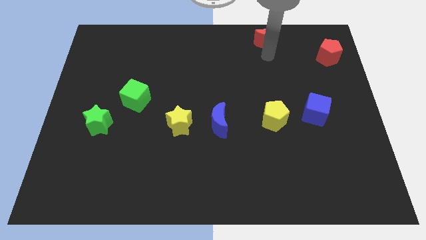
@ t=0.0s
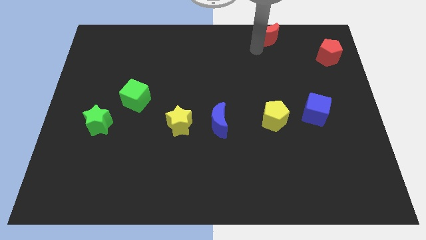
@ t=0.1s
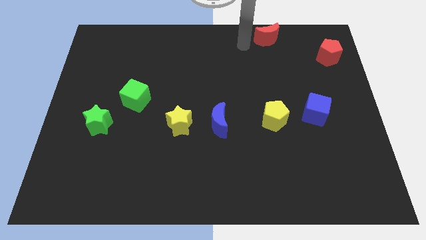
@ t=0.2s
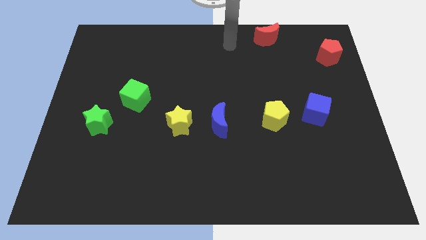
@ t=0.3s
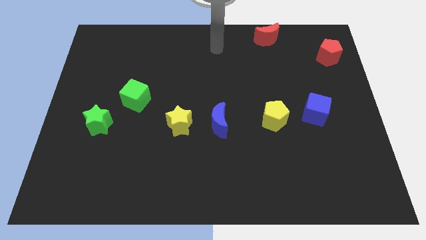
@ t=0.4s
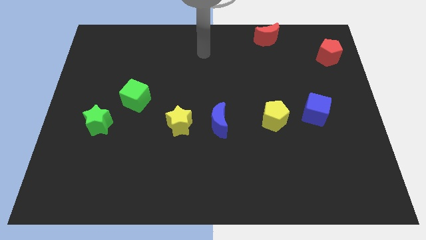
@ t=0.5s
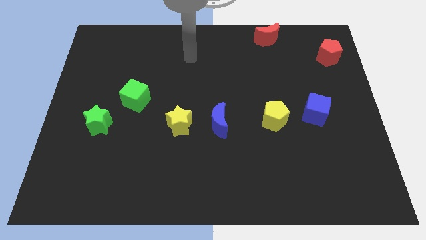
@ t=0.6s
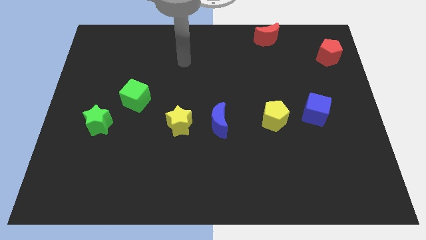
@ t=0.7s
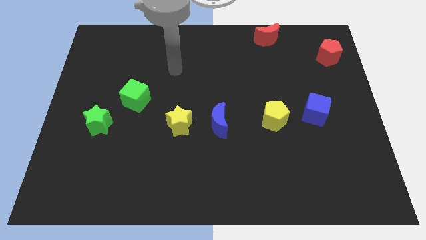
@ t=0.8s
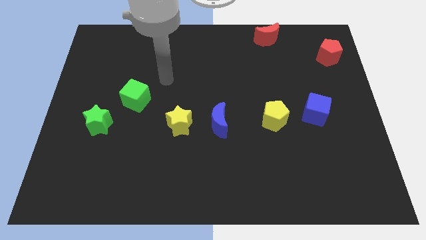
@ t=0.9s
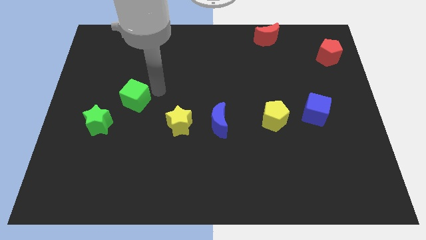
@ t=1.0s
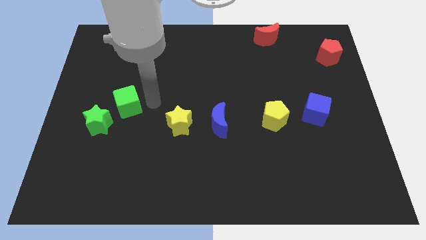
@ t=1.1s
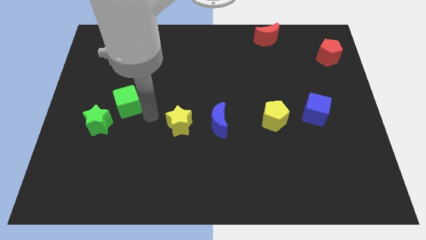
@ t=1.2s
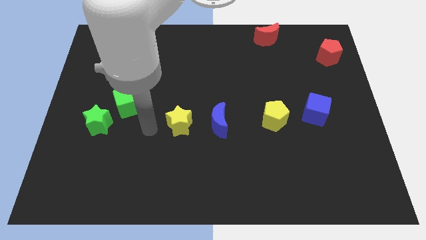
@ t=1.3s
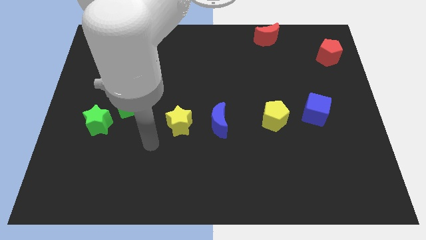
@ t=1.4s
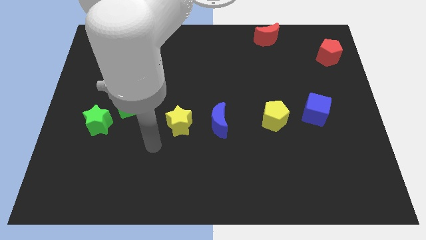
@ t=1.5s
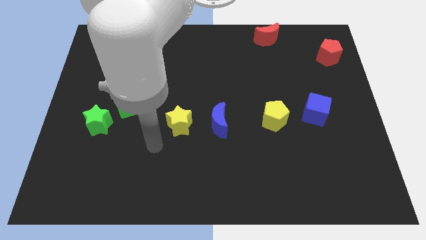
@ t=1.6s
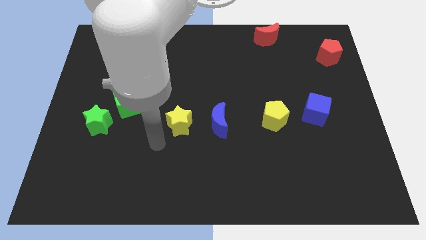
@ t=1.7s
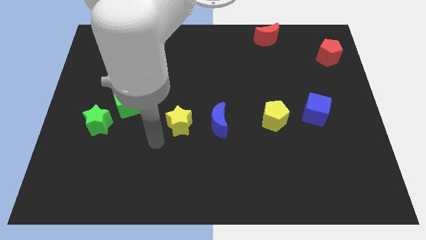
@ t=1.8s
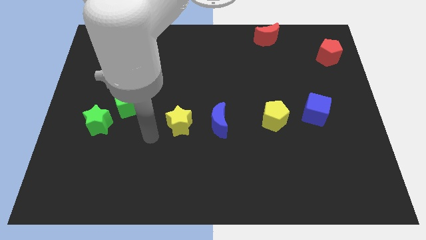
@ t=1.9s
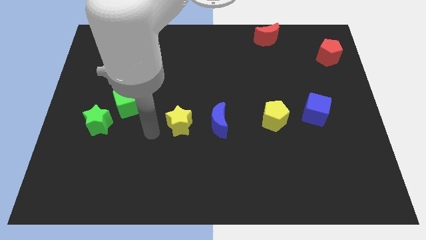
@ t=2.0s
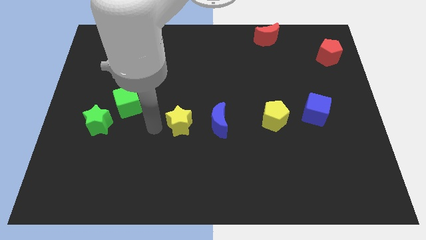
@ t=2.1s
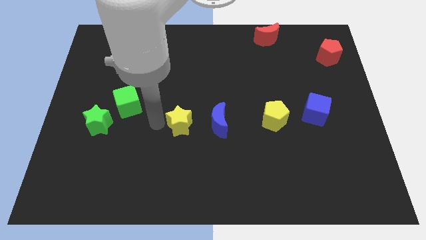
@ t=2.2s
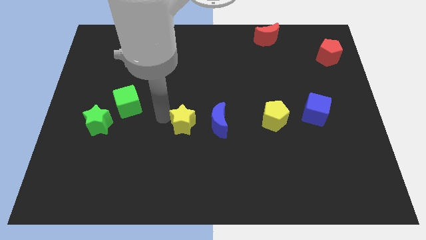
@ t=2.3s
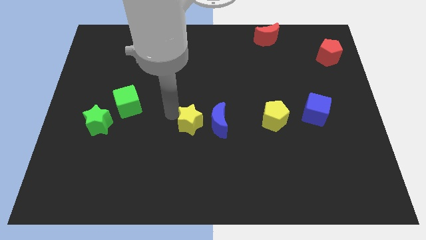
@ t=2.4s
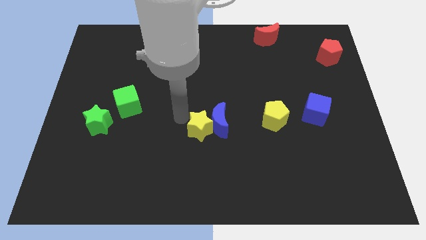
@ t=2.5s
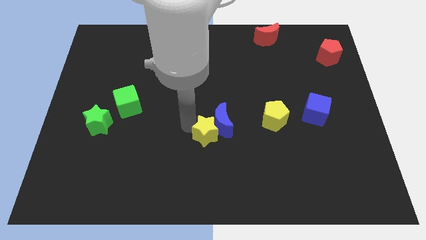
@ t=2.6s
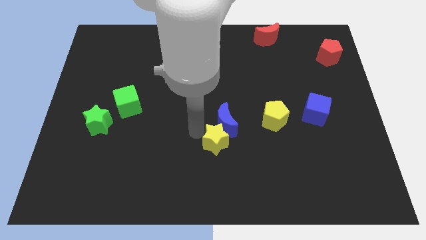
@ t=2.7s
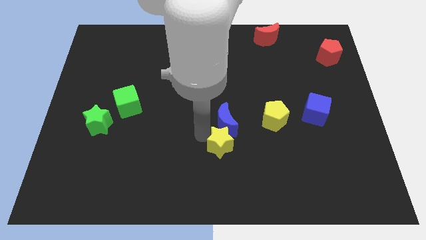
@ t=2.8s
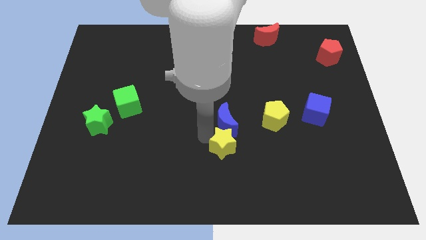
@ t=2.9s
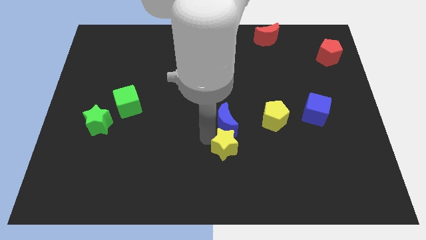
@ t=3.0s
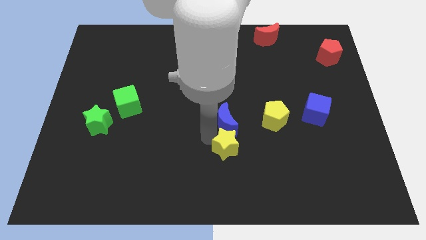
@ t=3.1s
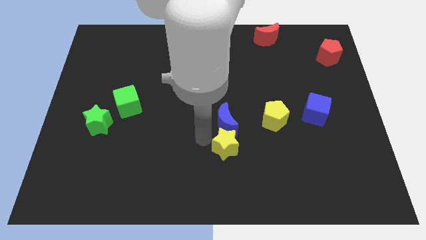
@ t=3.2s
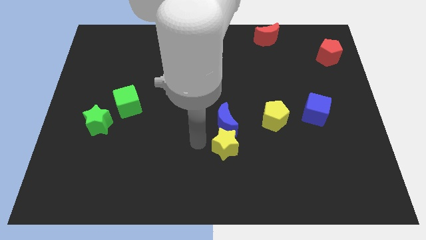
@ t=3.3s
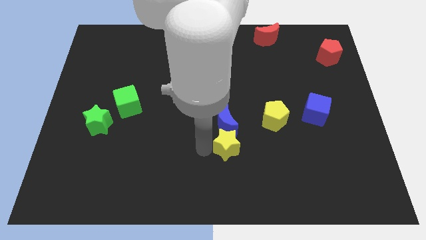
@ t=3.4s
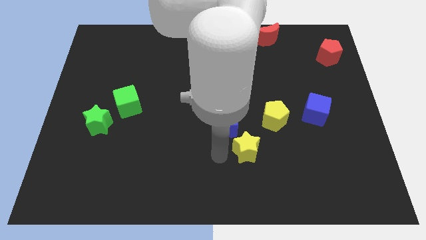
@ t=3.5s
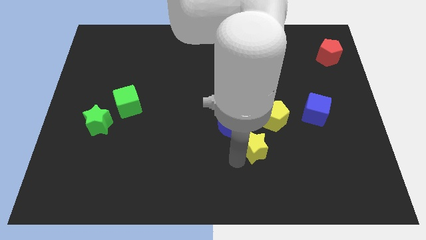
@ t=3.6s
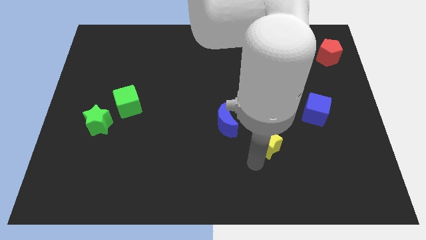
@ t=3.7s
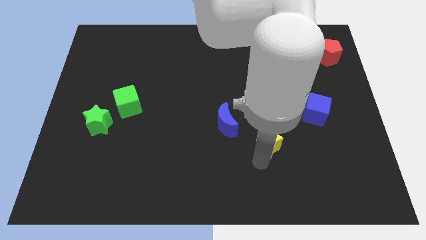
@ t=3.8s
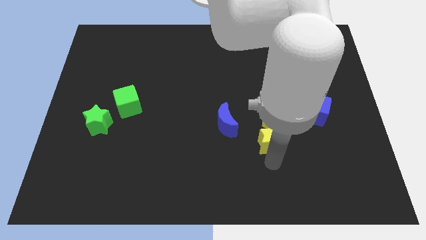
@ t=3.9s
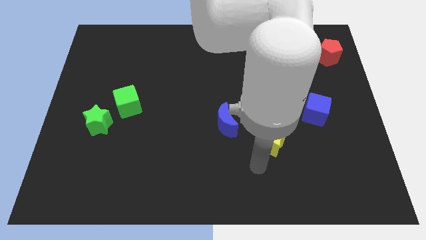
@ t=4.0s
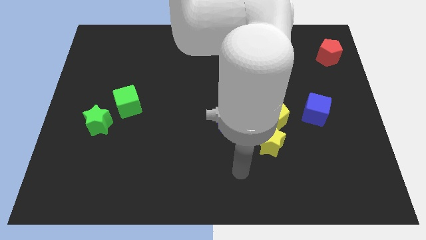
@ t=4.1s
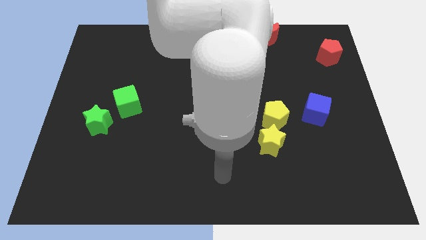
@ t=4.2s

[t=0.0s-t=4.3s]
move the yellow star to the bottom of the yellow pentagon

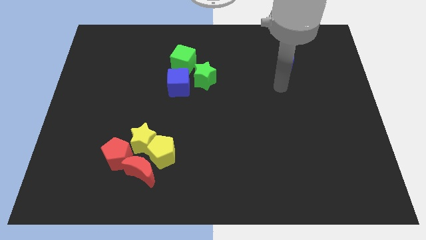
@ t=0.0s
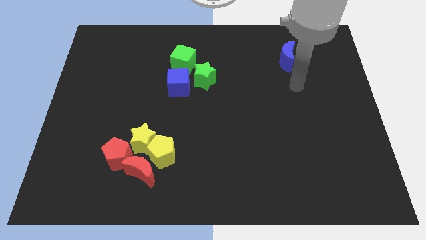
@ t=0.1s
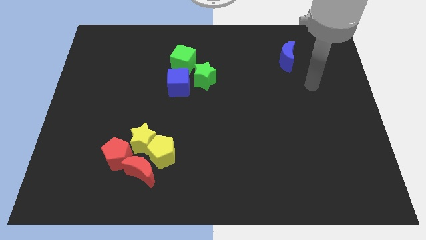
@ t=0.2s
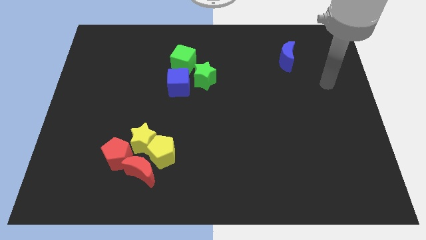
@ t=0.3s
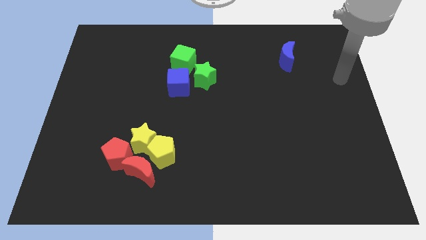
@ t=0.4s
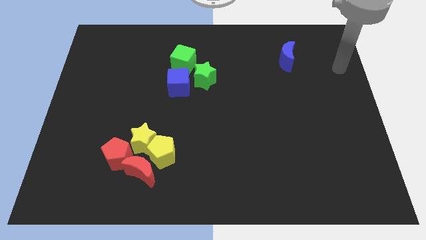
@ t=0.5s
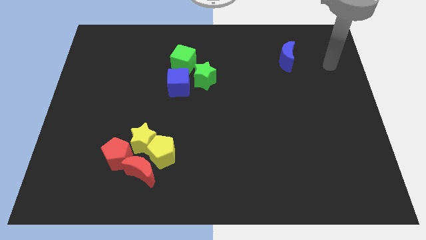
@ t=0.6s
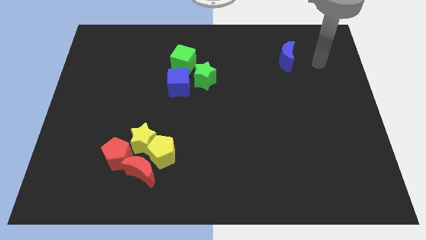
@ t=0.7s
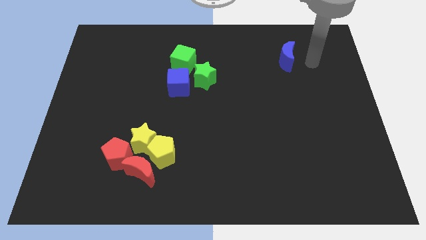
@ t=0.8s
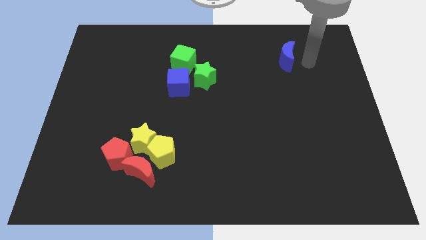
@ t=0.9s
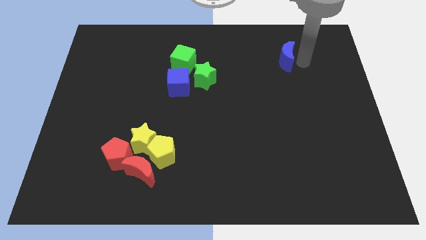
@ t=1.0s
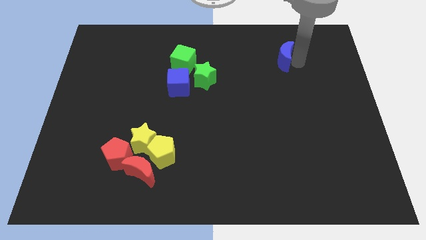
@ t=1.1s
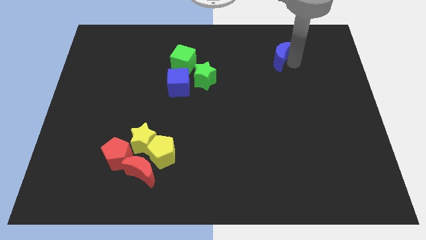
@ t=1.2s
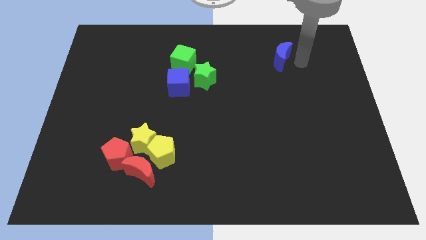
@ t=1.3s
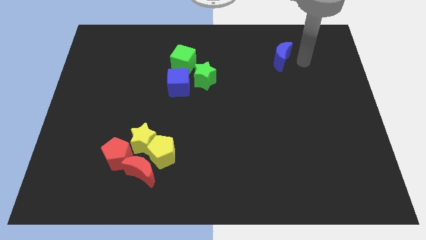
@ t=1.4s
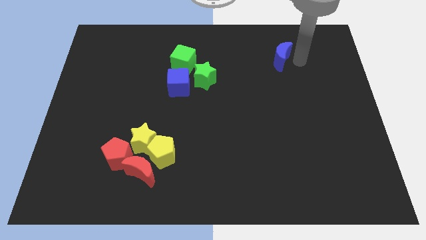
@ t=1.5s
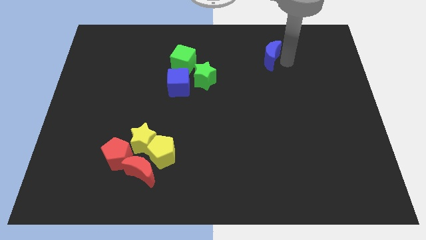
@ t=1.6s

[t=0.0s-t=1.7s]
push the blue moon slightly to the left

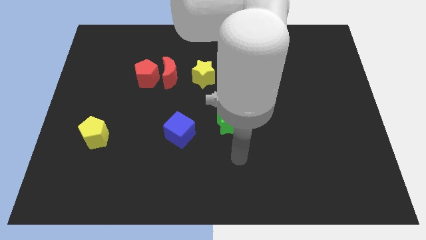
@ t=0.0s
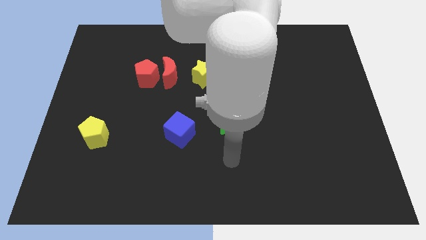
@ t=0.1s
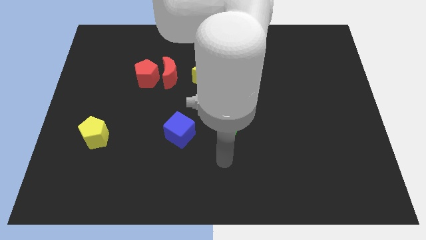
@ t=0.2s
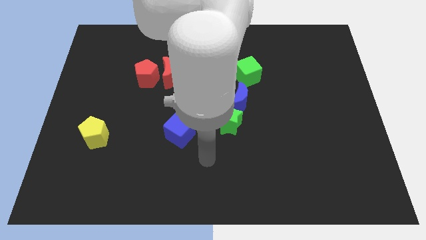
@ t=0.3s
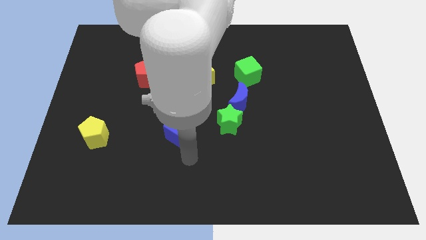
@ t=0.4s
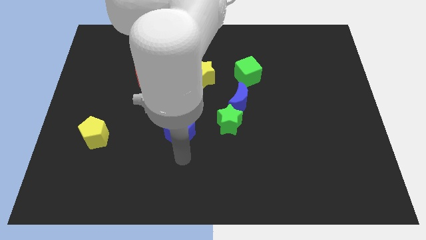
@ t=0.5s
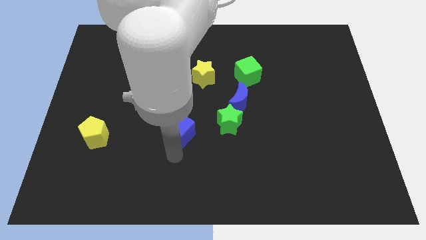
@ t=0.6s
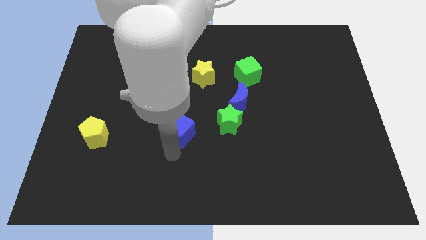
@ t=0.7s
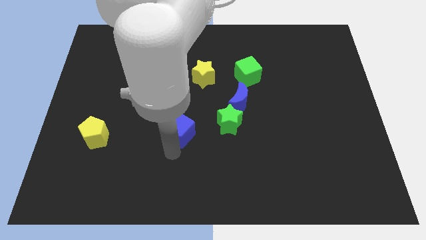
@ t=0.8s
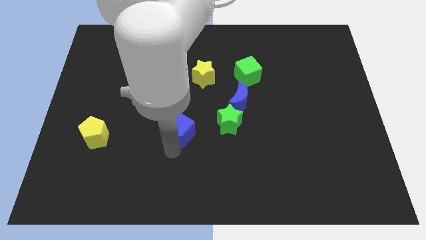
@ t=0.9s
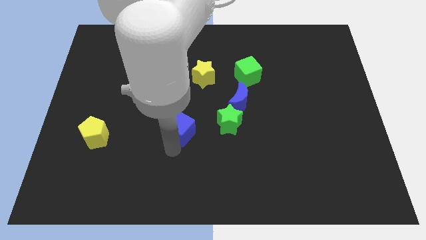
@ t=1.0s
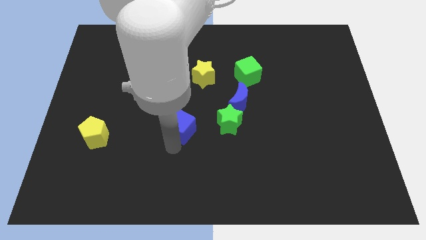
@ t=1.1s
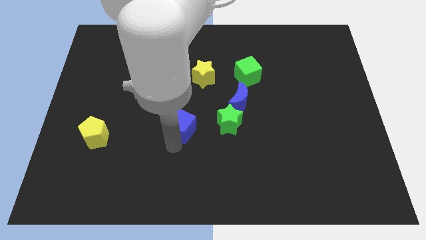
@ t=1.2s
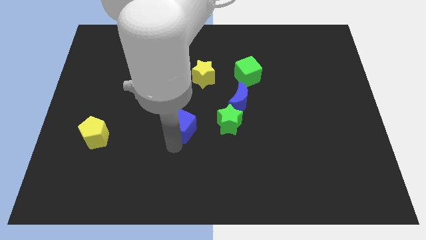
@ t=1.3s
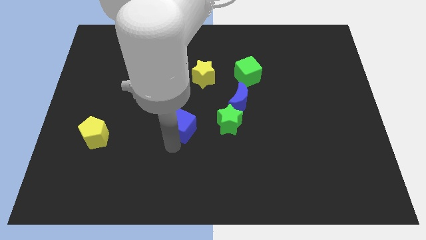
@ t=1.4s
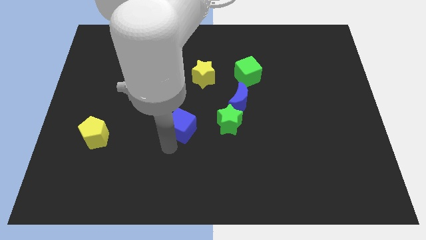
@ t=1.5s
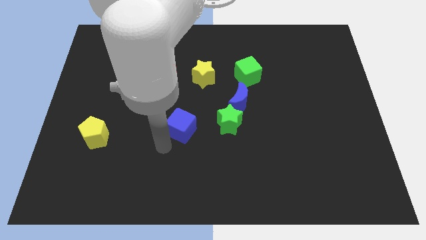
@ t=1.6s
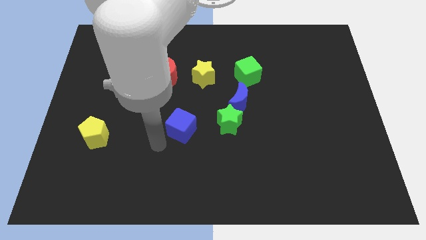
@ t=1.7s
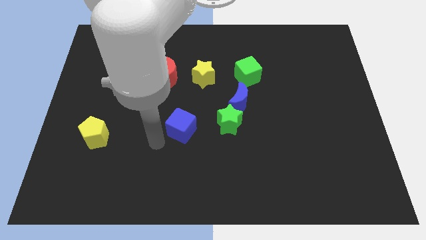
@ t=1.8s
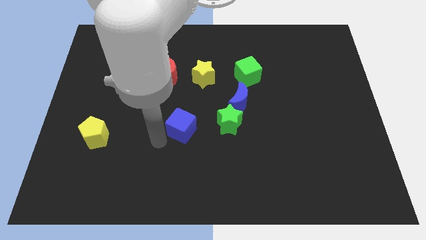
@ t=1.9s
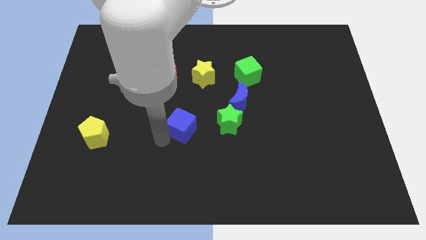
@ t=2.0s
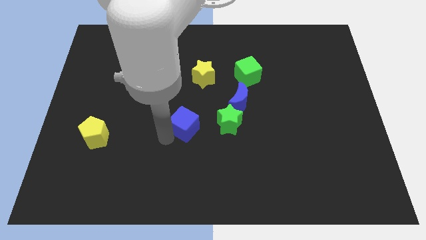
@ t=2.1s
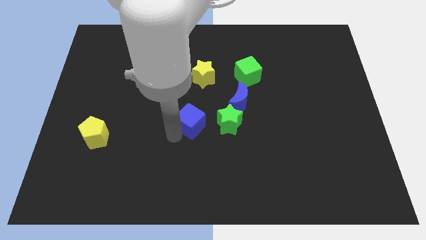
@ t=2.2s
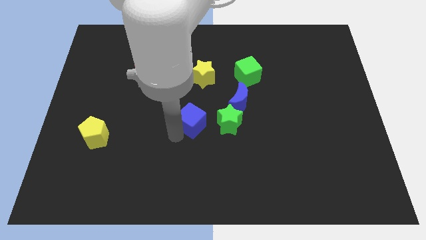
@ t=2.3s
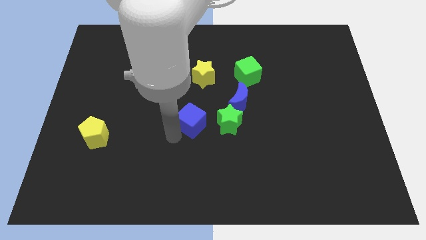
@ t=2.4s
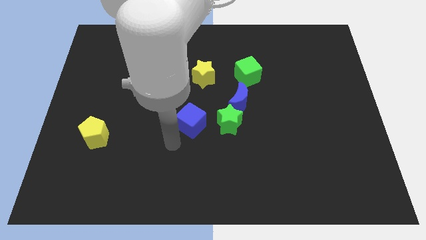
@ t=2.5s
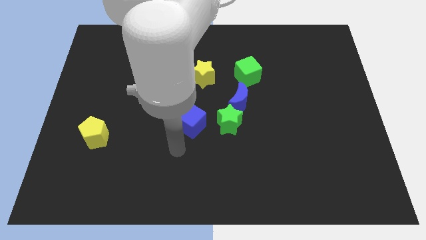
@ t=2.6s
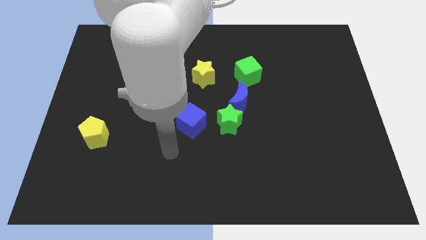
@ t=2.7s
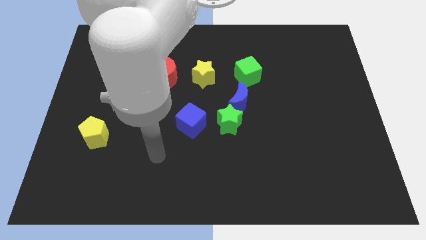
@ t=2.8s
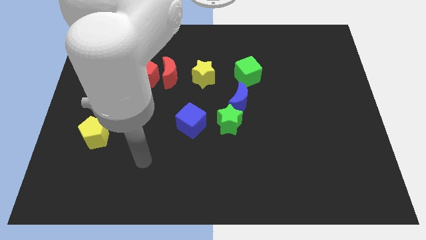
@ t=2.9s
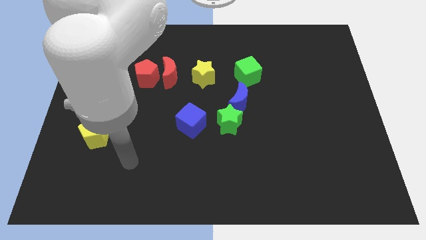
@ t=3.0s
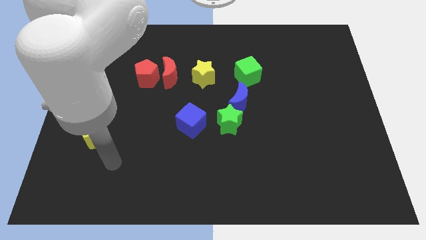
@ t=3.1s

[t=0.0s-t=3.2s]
move the blue cube left to the green star
